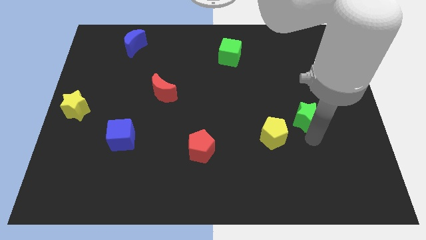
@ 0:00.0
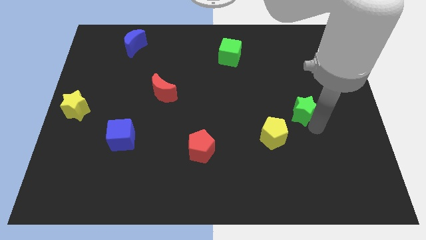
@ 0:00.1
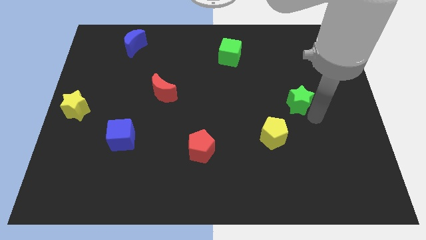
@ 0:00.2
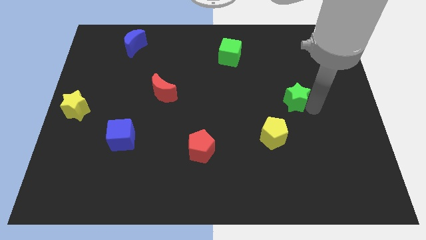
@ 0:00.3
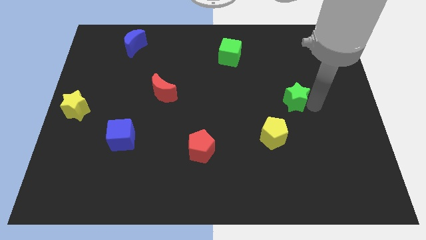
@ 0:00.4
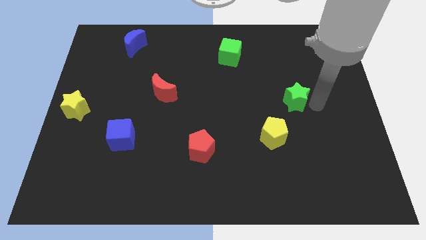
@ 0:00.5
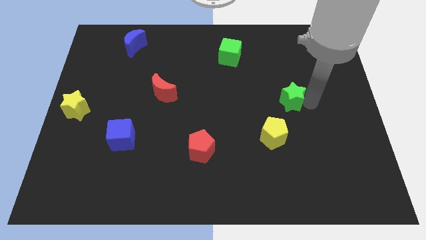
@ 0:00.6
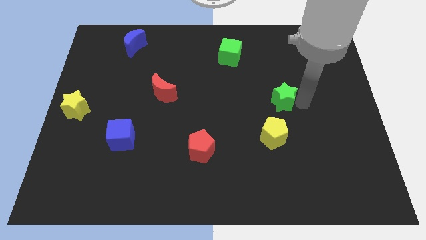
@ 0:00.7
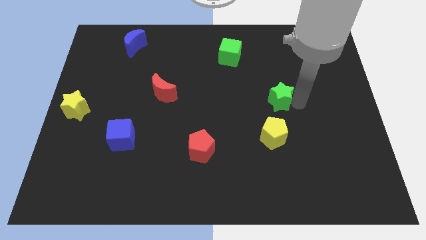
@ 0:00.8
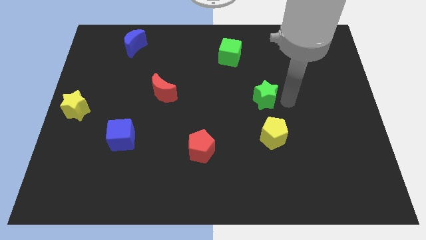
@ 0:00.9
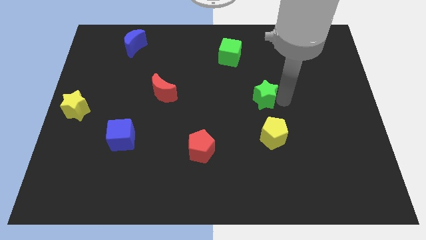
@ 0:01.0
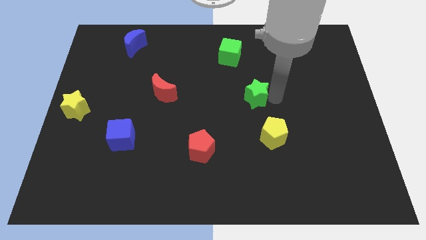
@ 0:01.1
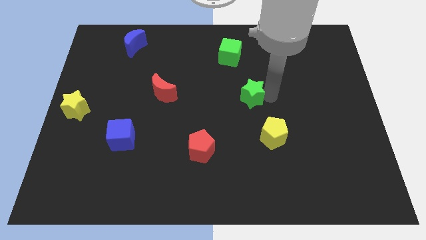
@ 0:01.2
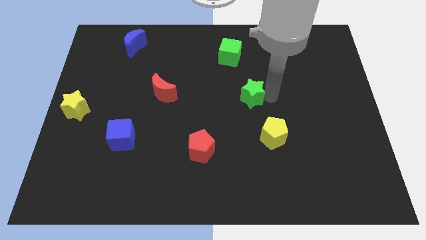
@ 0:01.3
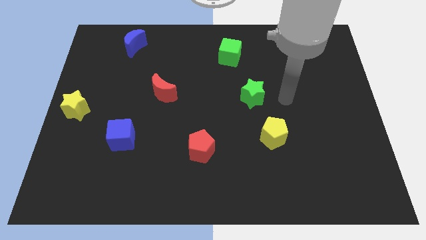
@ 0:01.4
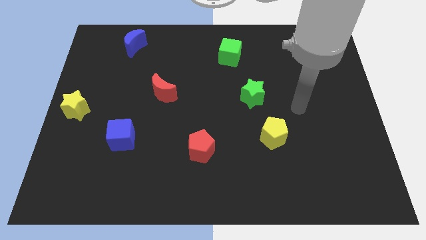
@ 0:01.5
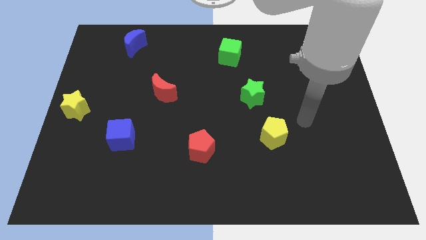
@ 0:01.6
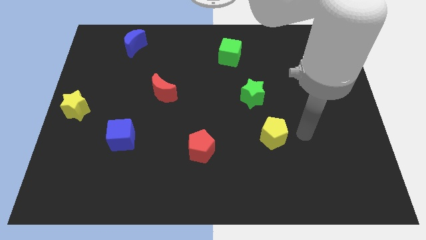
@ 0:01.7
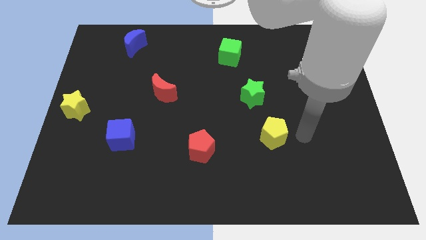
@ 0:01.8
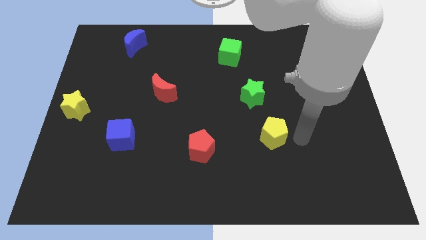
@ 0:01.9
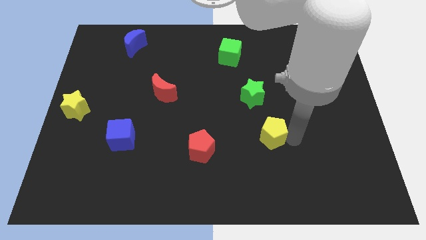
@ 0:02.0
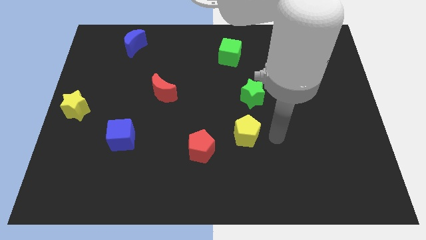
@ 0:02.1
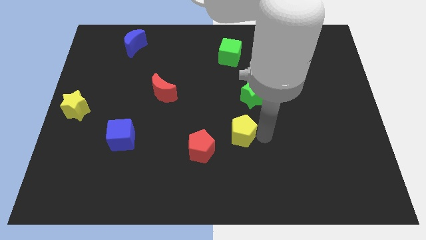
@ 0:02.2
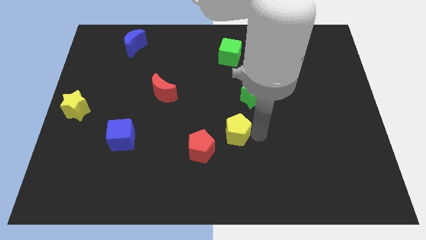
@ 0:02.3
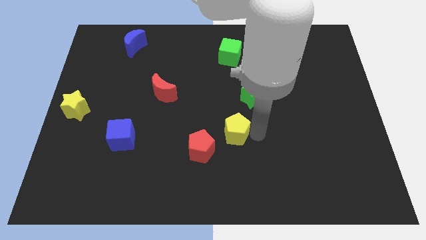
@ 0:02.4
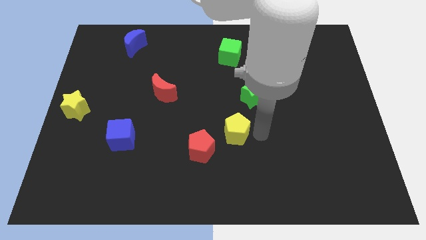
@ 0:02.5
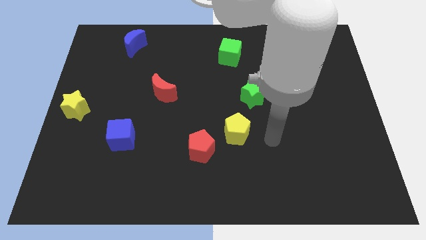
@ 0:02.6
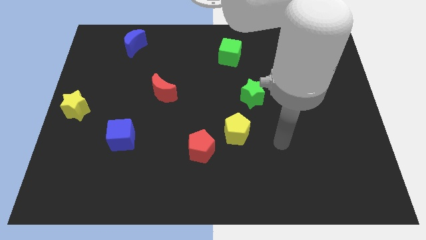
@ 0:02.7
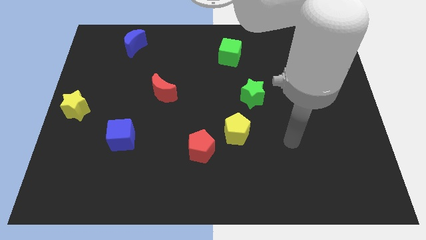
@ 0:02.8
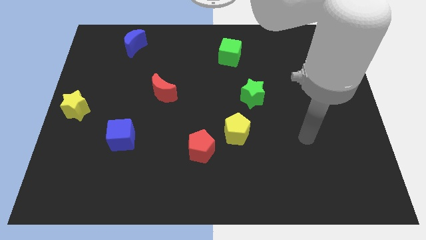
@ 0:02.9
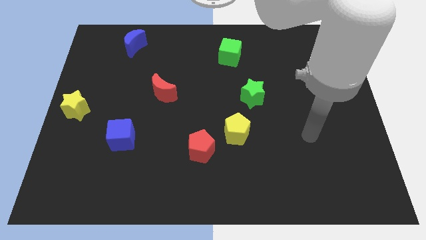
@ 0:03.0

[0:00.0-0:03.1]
drag the green star to the left

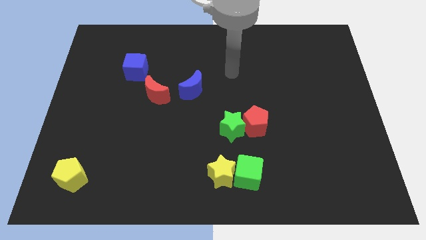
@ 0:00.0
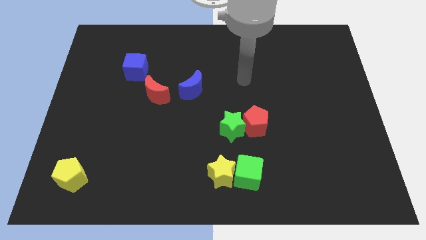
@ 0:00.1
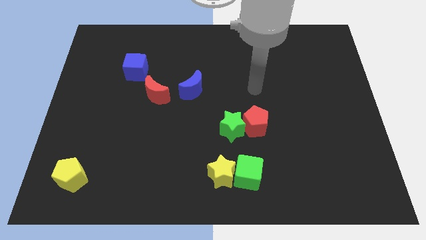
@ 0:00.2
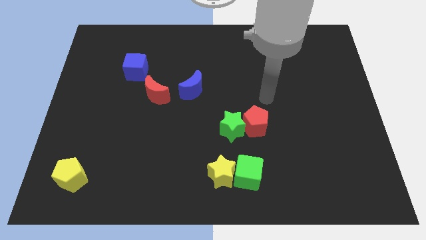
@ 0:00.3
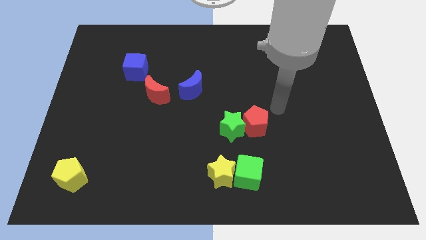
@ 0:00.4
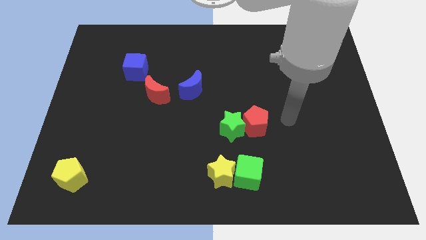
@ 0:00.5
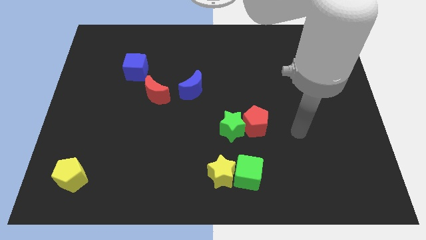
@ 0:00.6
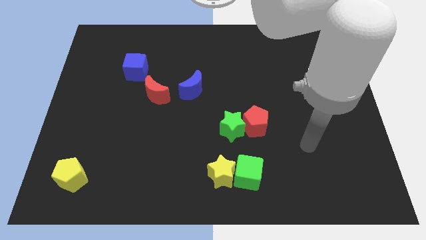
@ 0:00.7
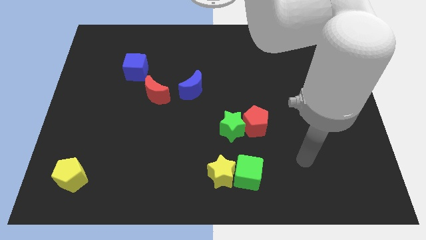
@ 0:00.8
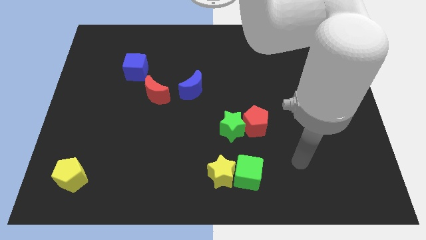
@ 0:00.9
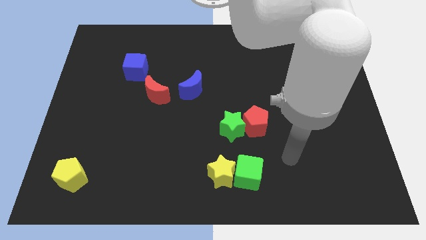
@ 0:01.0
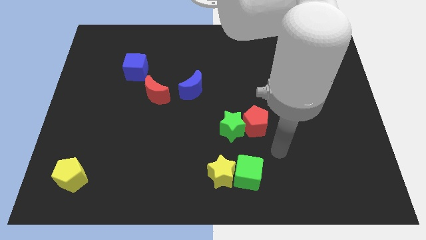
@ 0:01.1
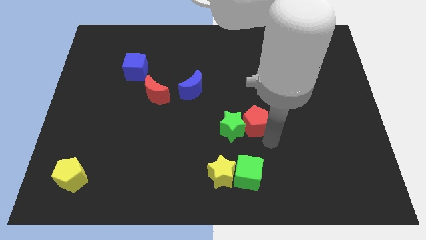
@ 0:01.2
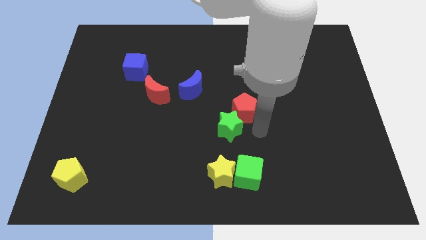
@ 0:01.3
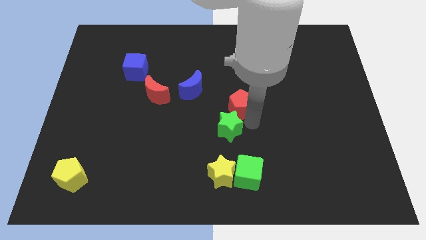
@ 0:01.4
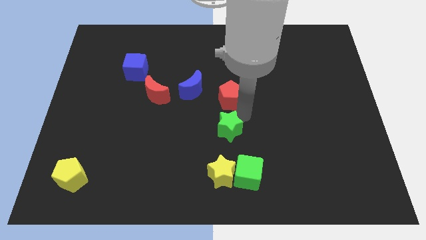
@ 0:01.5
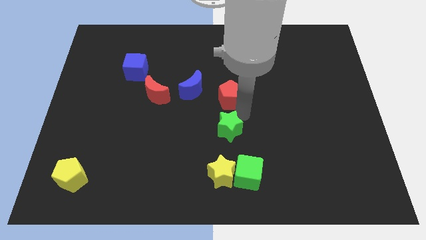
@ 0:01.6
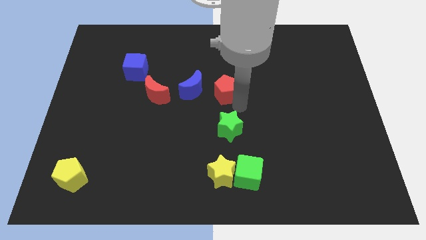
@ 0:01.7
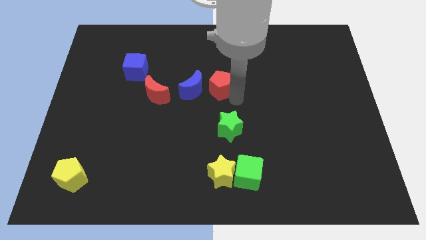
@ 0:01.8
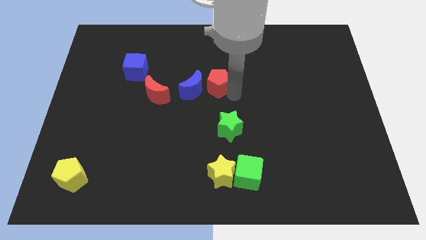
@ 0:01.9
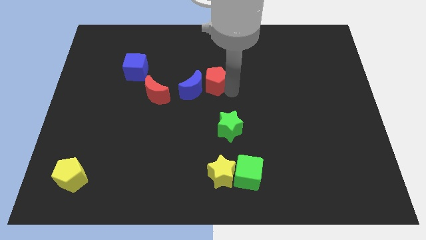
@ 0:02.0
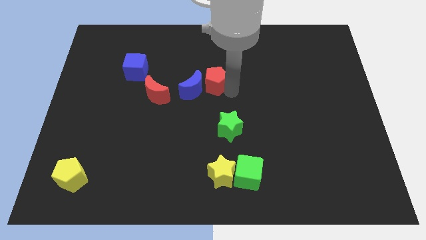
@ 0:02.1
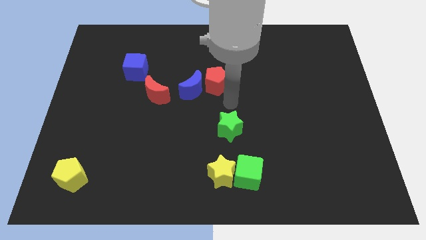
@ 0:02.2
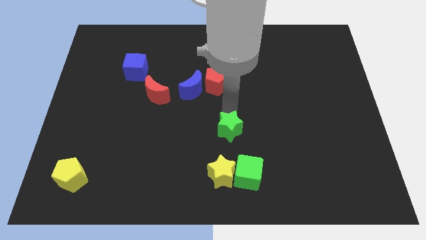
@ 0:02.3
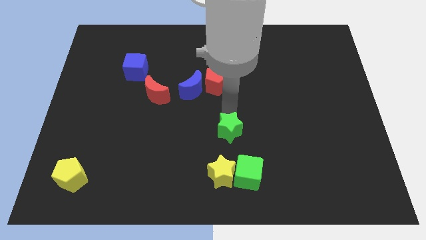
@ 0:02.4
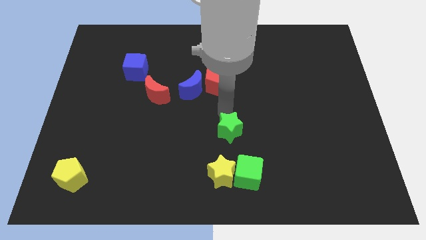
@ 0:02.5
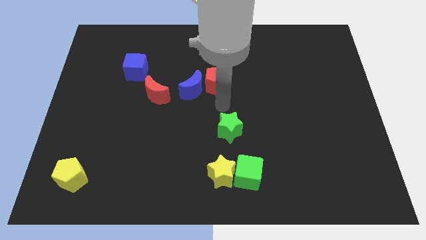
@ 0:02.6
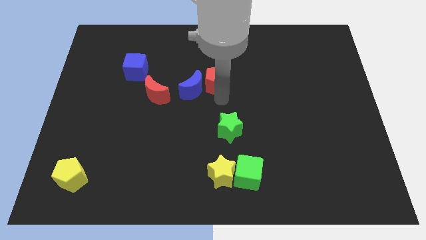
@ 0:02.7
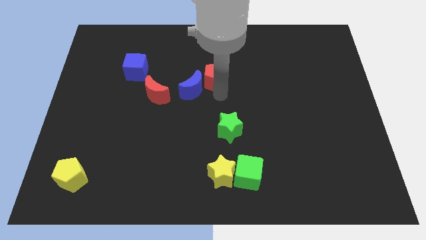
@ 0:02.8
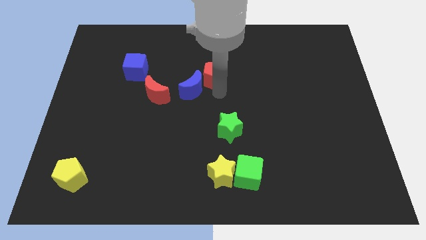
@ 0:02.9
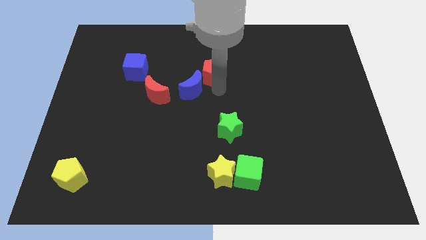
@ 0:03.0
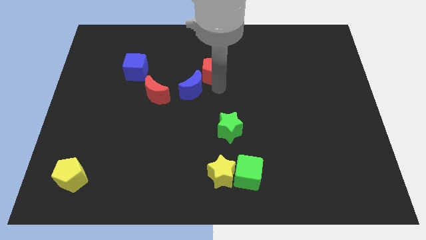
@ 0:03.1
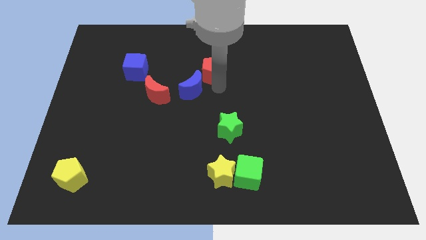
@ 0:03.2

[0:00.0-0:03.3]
move the red pentagon at the top right side of the blue crescent

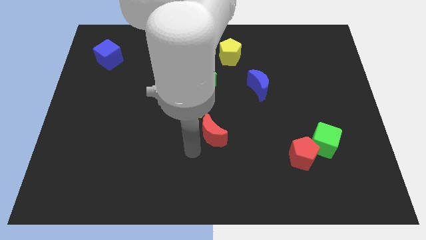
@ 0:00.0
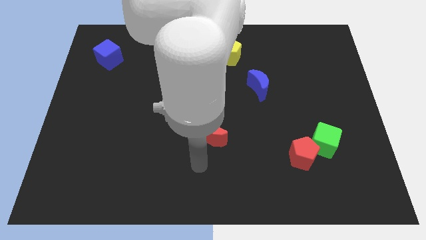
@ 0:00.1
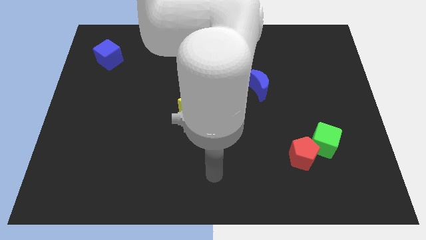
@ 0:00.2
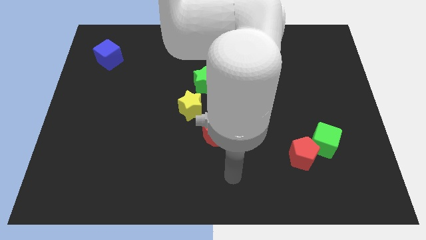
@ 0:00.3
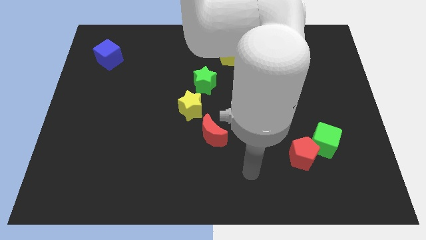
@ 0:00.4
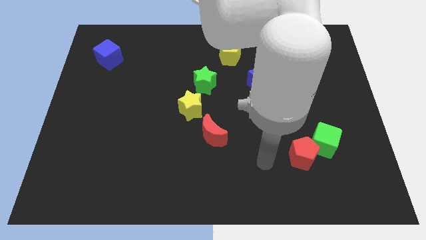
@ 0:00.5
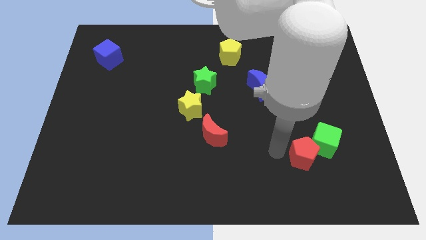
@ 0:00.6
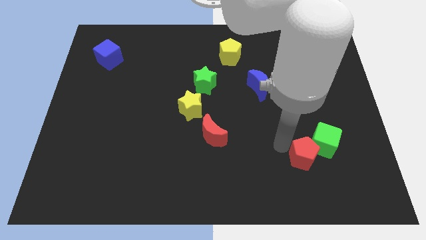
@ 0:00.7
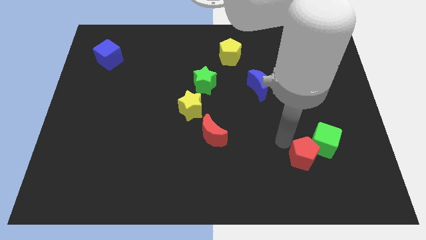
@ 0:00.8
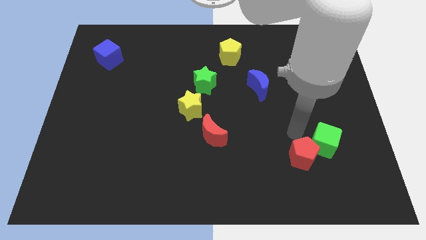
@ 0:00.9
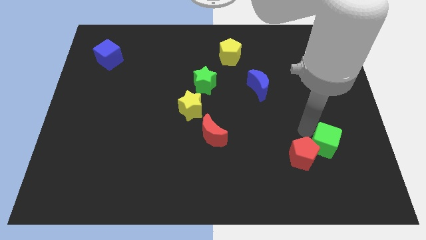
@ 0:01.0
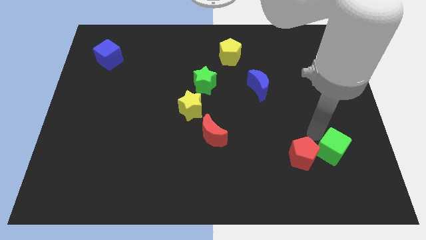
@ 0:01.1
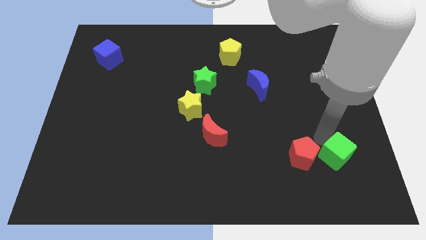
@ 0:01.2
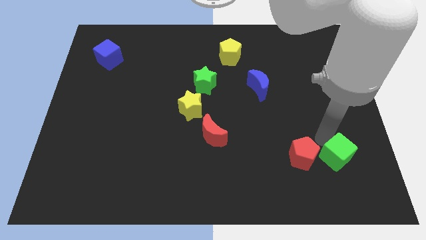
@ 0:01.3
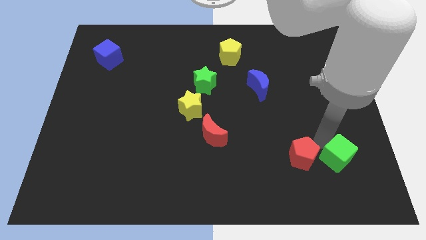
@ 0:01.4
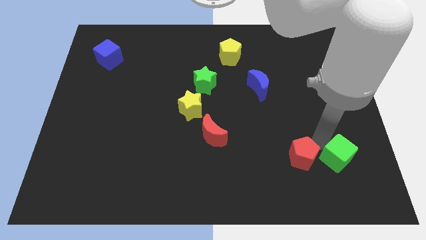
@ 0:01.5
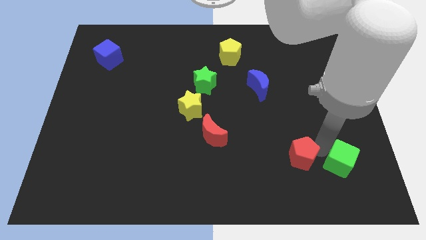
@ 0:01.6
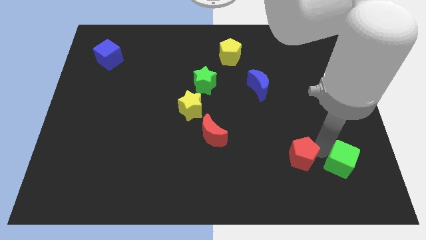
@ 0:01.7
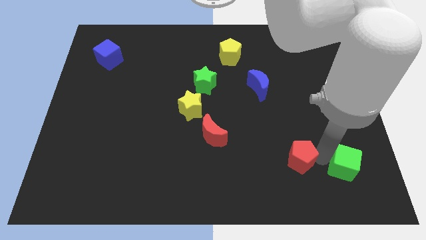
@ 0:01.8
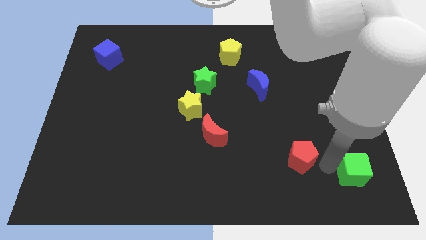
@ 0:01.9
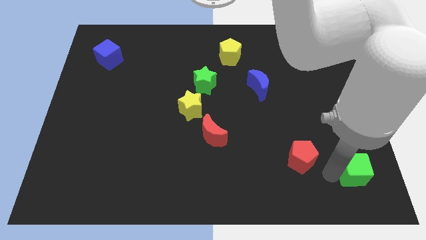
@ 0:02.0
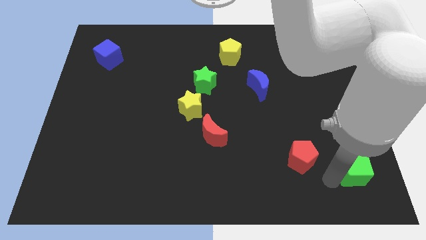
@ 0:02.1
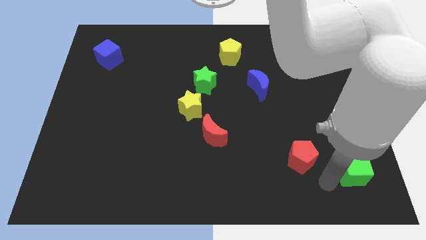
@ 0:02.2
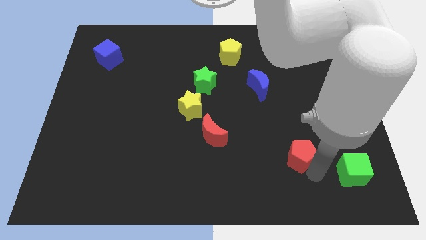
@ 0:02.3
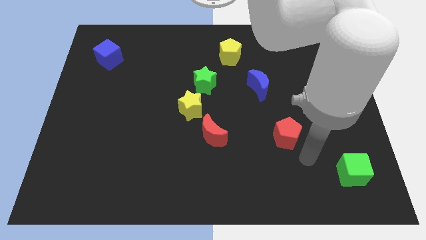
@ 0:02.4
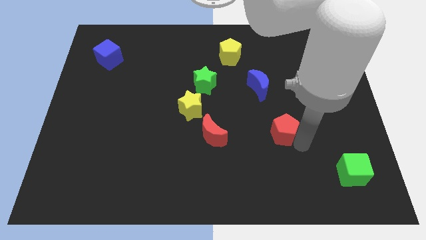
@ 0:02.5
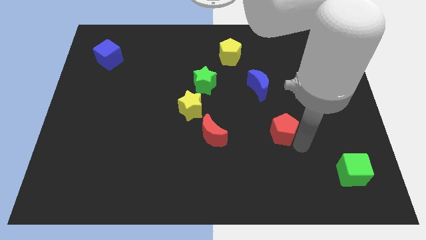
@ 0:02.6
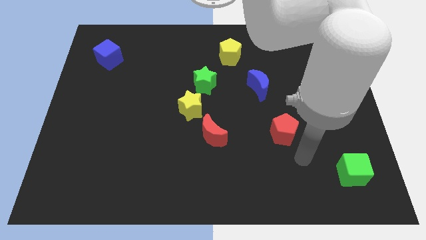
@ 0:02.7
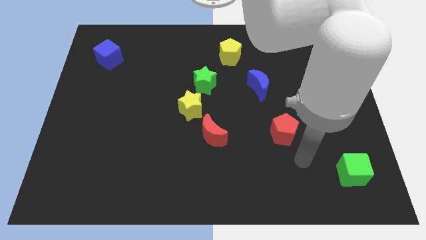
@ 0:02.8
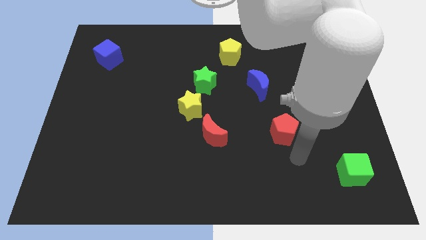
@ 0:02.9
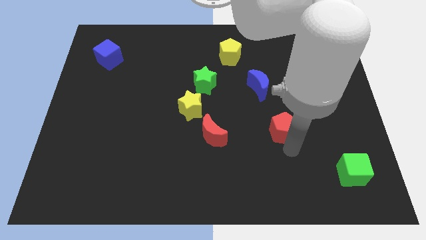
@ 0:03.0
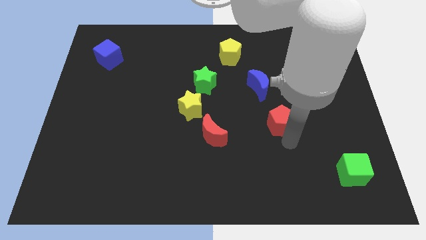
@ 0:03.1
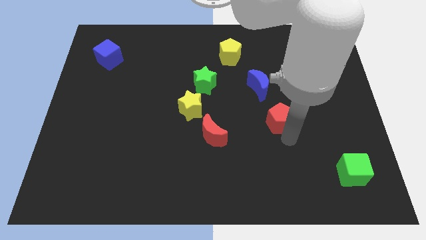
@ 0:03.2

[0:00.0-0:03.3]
separate the red pentagon from the green cube
